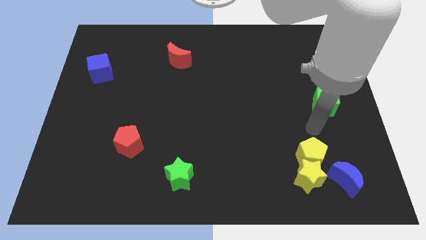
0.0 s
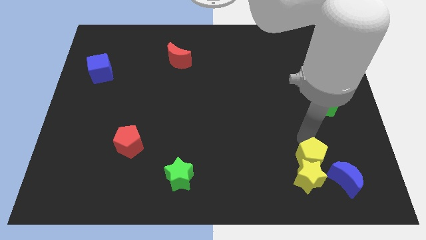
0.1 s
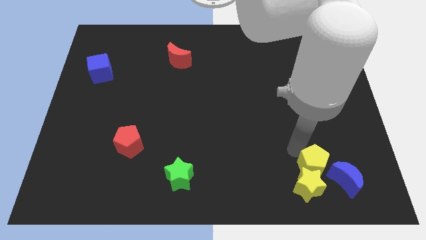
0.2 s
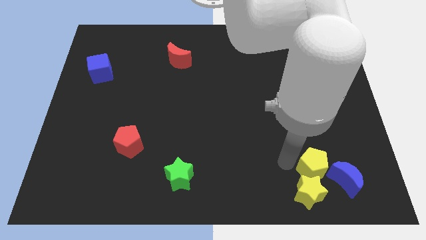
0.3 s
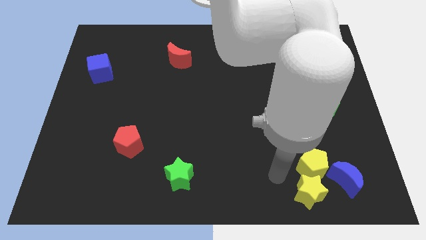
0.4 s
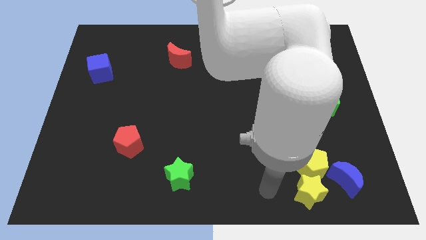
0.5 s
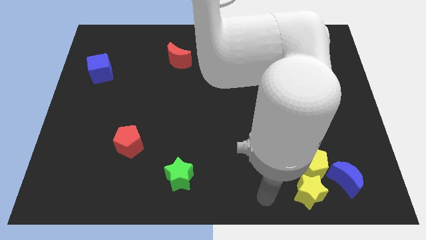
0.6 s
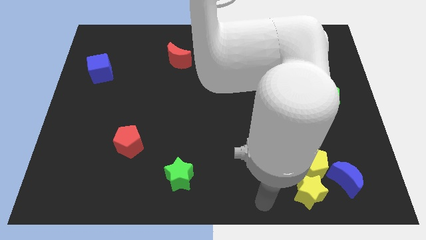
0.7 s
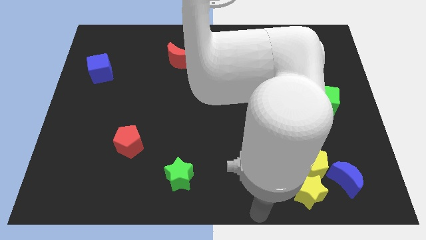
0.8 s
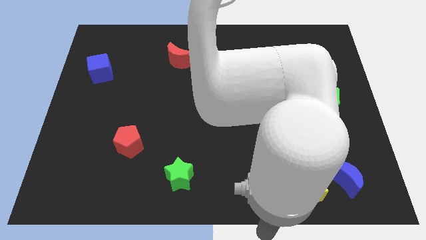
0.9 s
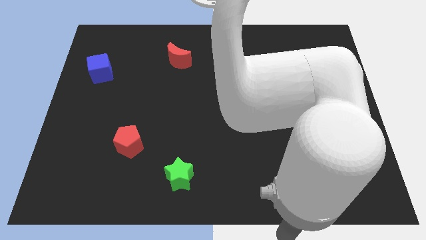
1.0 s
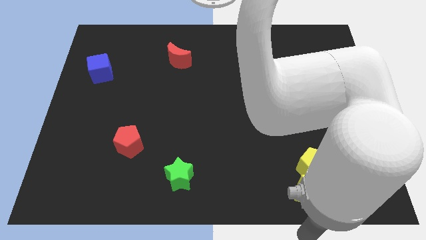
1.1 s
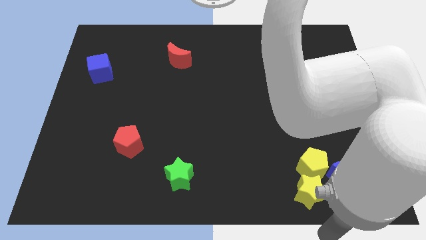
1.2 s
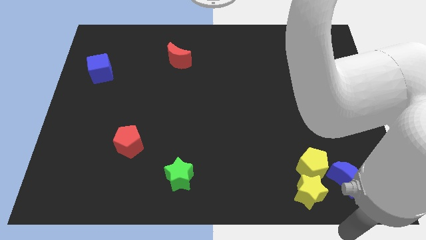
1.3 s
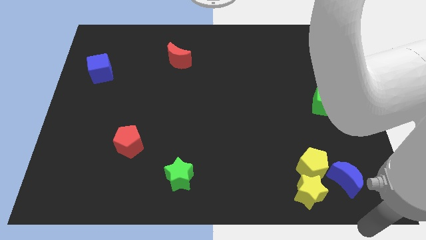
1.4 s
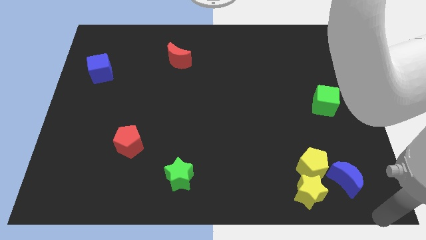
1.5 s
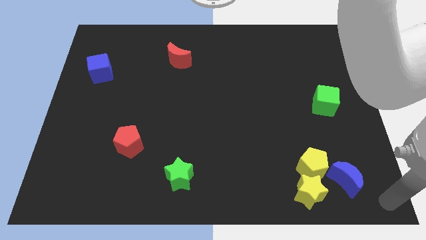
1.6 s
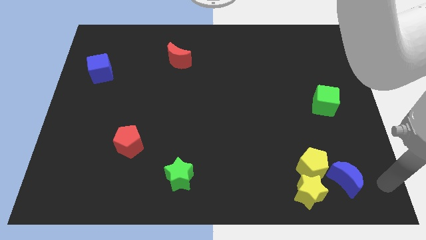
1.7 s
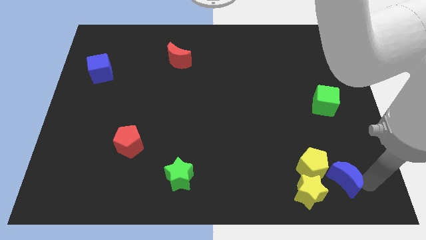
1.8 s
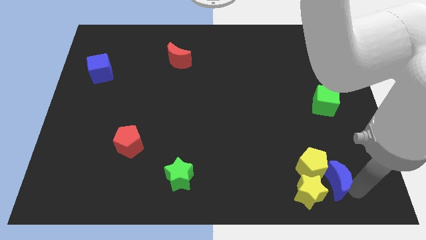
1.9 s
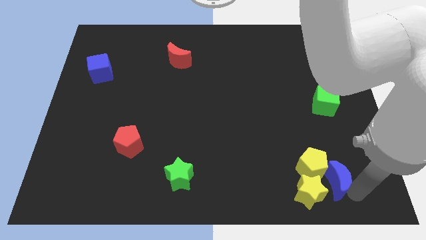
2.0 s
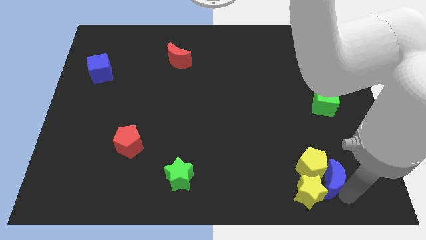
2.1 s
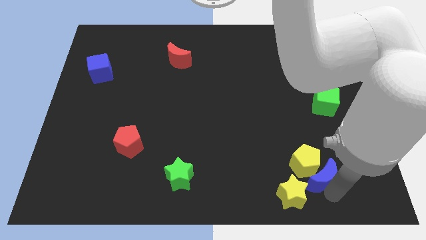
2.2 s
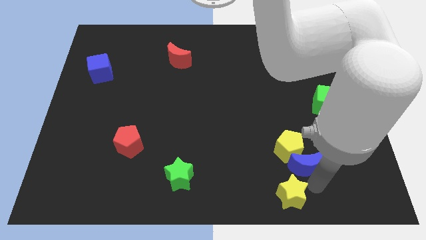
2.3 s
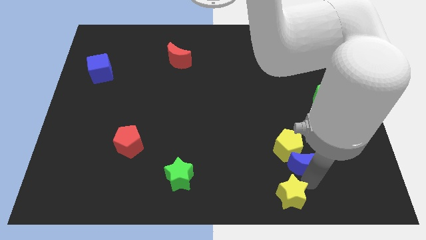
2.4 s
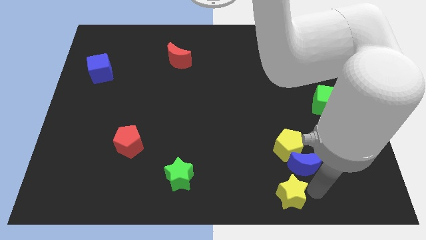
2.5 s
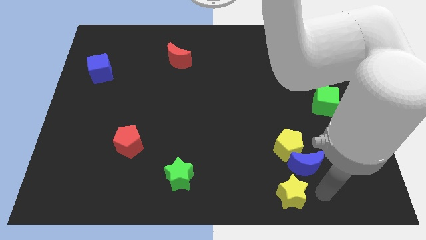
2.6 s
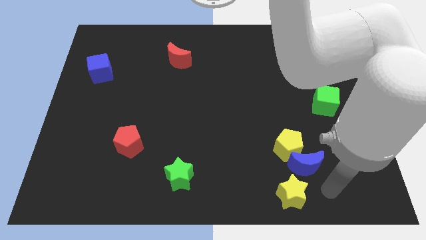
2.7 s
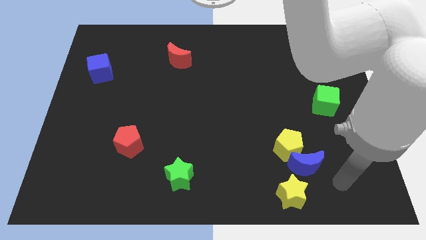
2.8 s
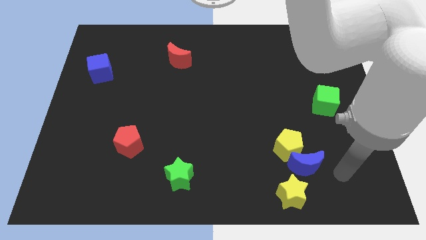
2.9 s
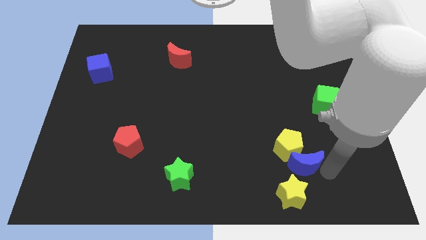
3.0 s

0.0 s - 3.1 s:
move the blue crescent slightly to the yellow pentagon

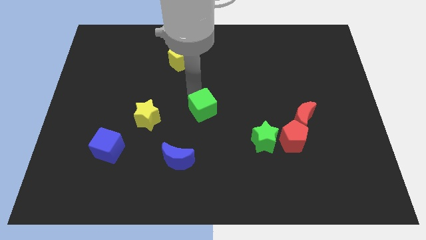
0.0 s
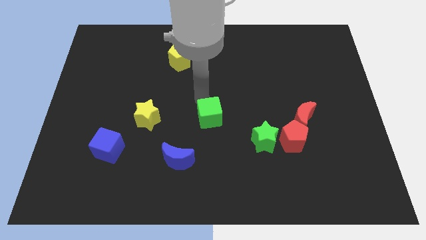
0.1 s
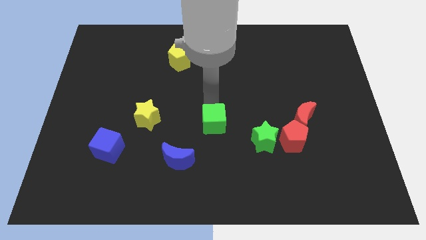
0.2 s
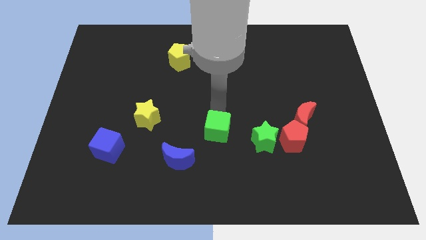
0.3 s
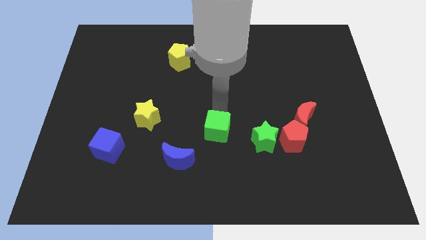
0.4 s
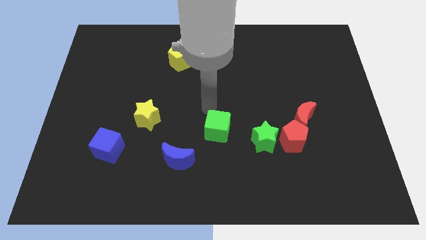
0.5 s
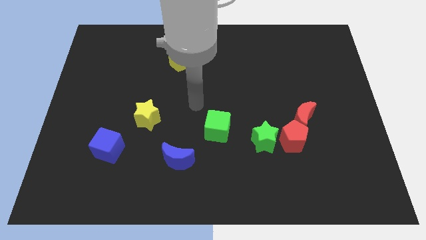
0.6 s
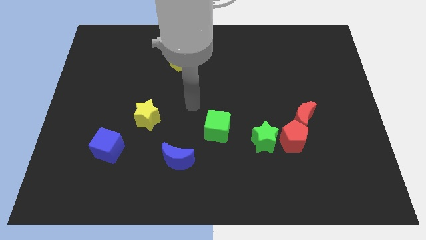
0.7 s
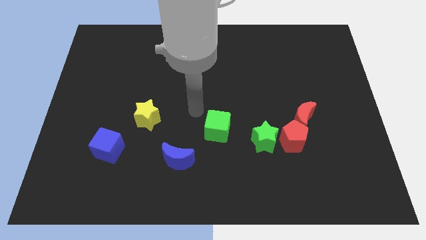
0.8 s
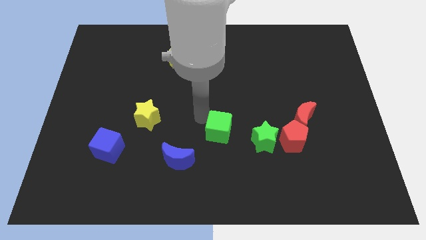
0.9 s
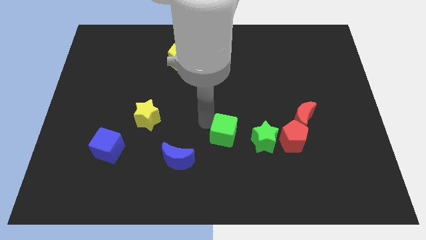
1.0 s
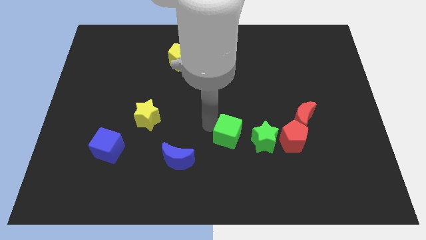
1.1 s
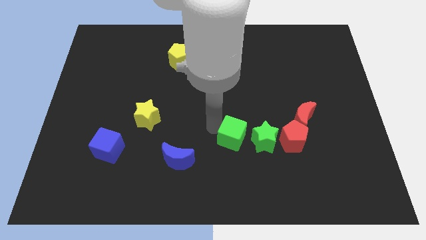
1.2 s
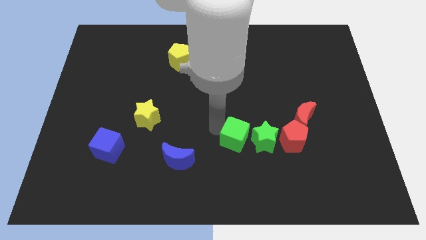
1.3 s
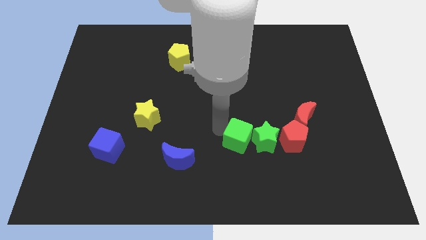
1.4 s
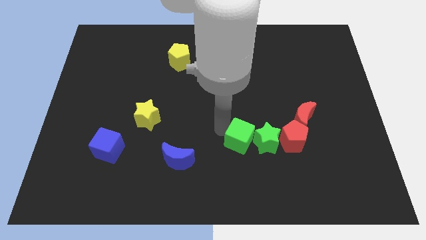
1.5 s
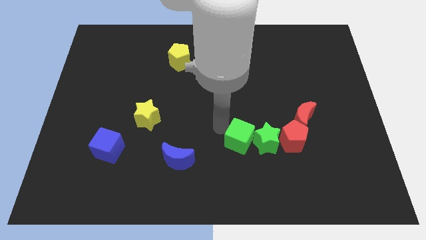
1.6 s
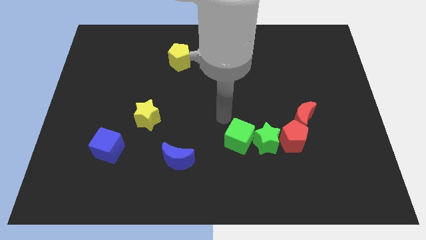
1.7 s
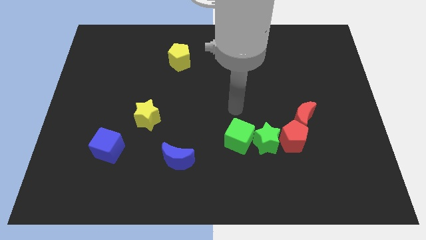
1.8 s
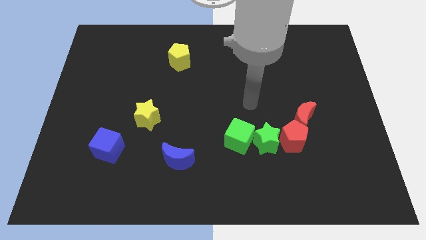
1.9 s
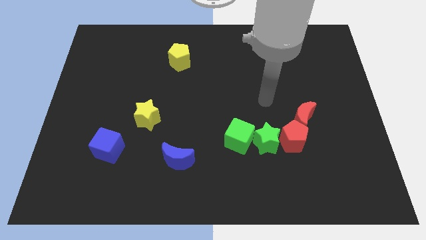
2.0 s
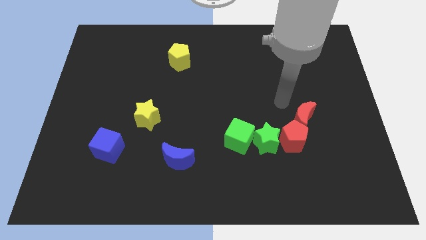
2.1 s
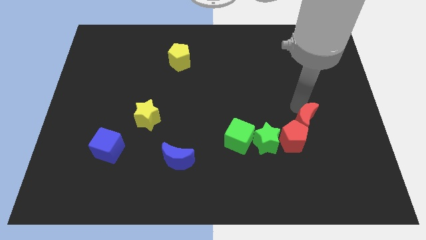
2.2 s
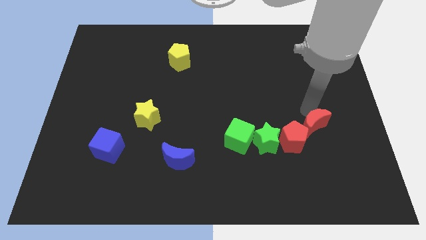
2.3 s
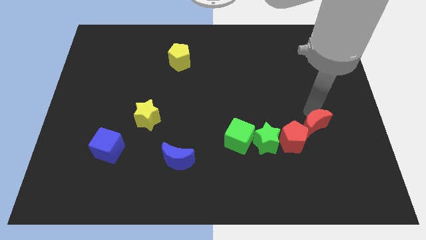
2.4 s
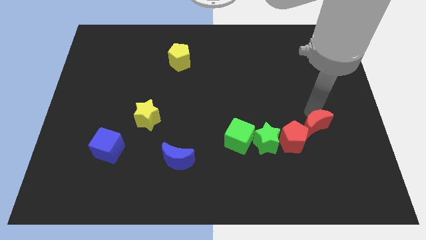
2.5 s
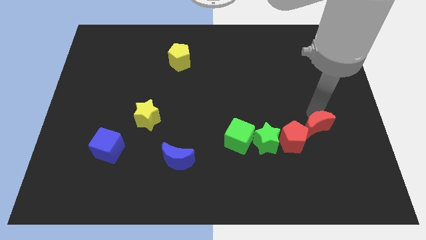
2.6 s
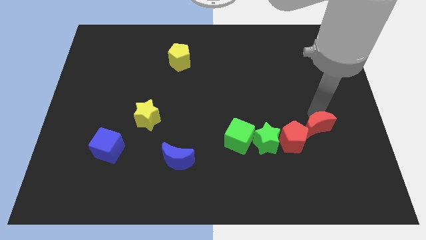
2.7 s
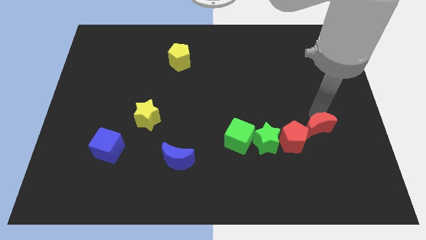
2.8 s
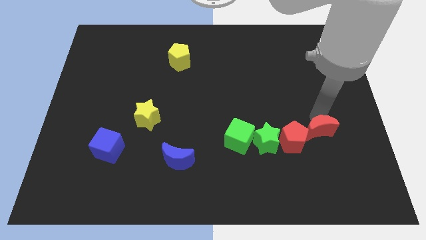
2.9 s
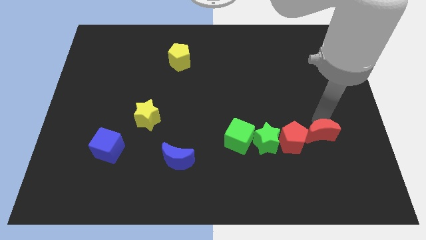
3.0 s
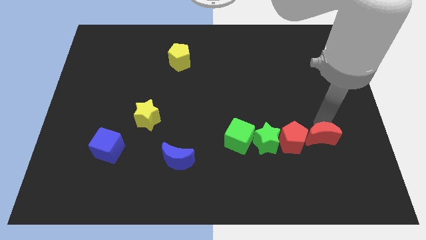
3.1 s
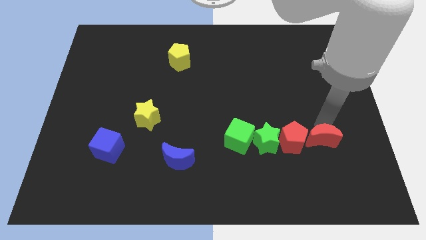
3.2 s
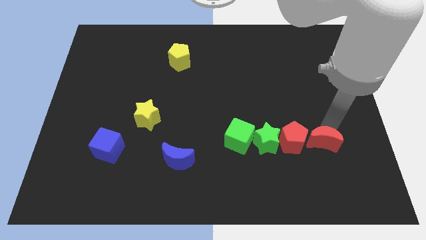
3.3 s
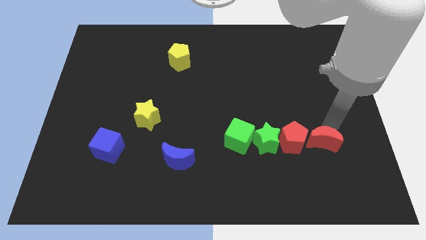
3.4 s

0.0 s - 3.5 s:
place the green cube left to the green star to form a horizontal line

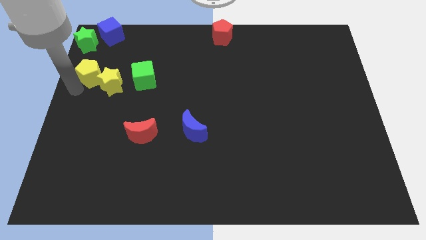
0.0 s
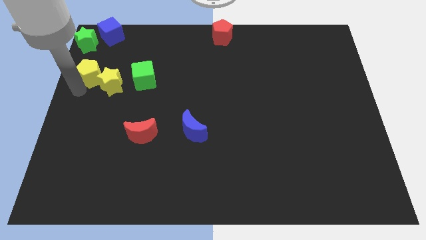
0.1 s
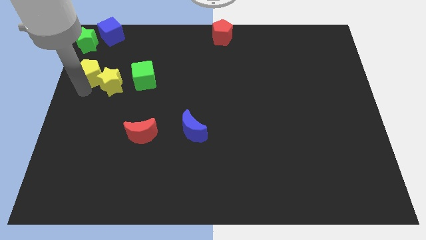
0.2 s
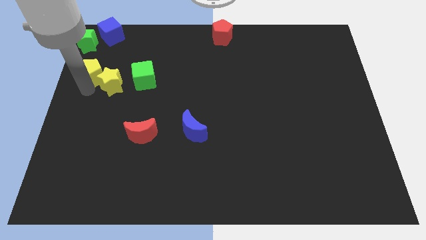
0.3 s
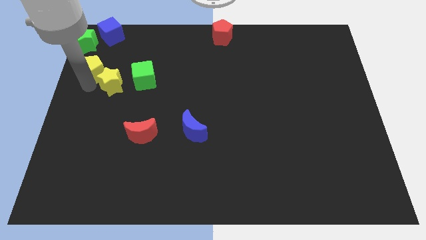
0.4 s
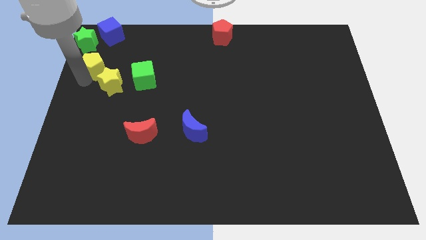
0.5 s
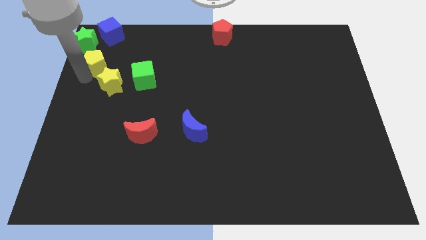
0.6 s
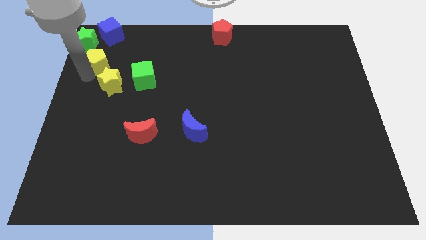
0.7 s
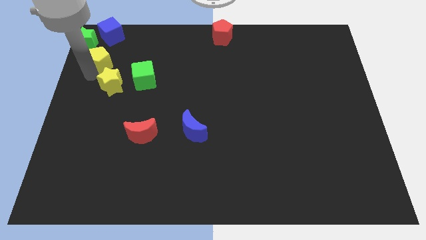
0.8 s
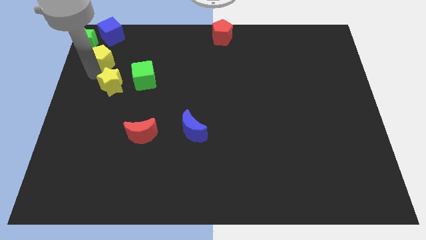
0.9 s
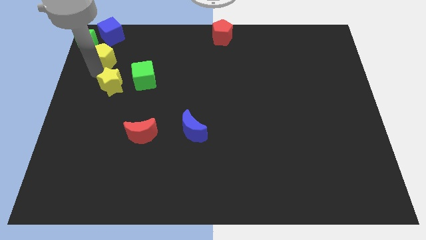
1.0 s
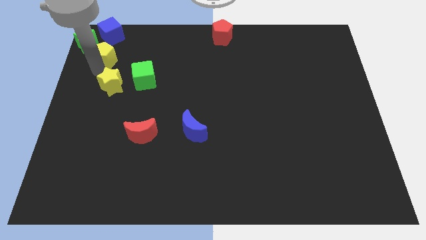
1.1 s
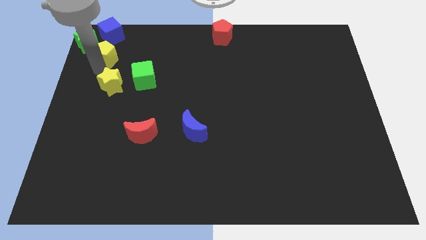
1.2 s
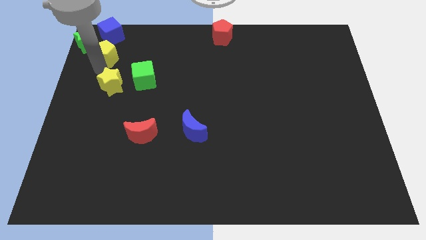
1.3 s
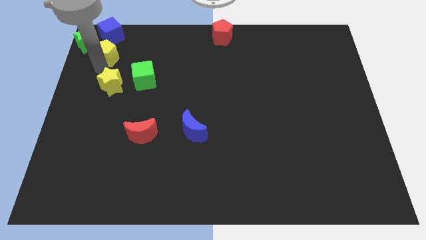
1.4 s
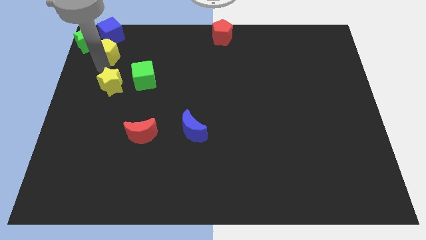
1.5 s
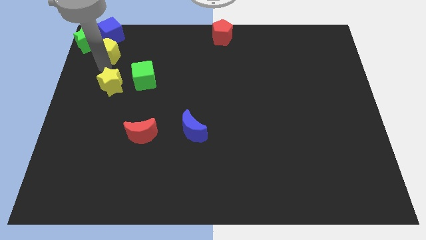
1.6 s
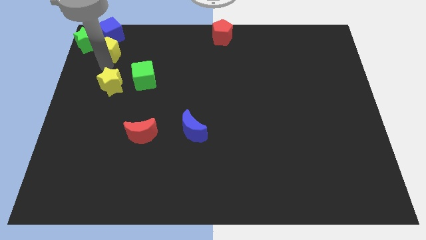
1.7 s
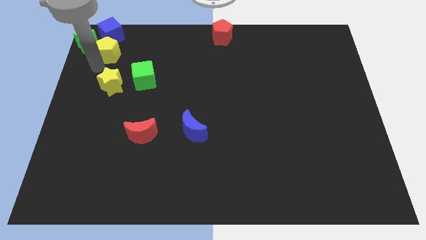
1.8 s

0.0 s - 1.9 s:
push the yellow pentagon towards the blue cube

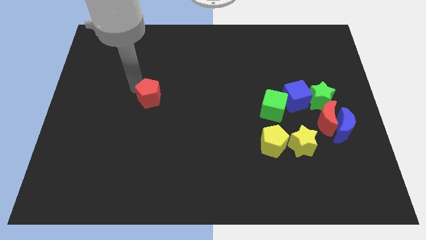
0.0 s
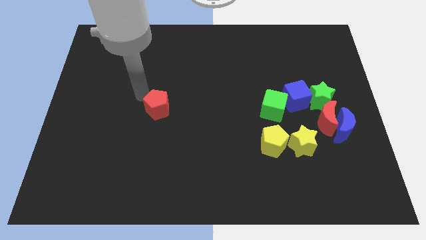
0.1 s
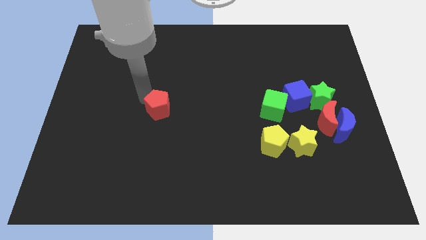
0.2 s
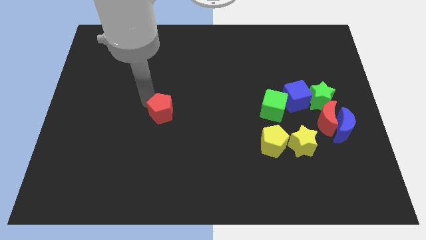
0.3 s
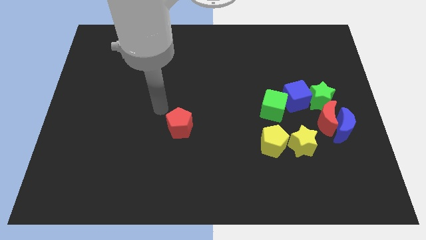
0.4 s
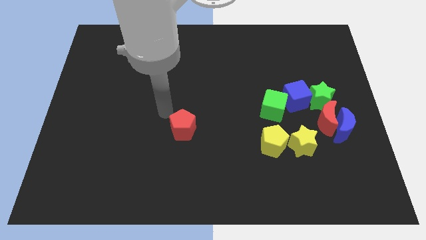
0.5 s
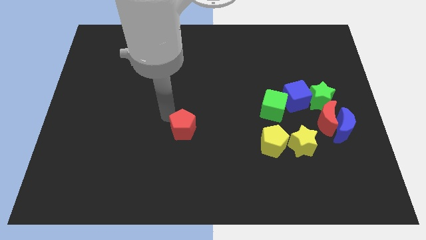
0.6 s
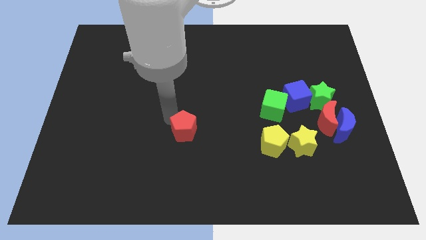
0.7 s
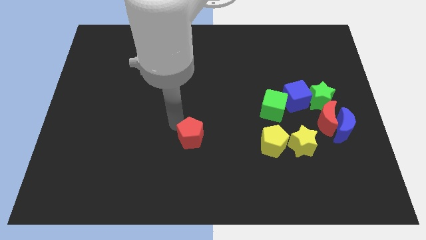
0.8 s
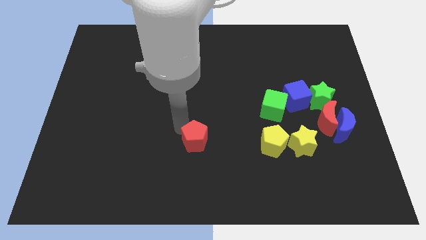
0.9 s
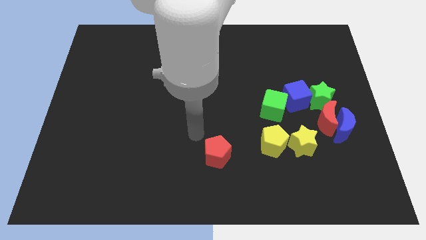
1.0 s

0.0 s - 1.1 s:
push the red pentagon towards bottom center
